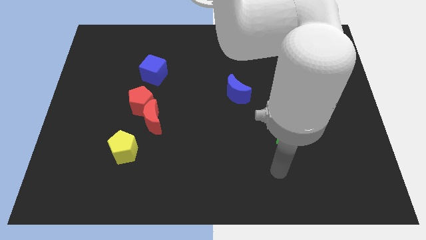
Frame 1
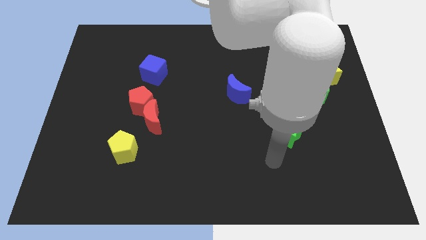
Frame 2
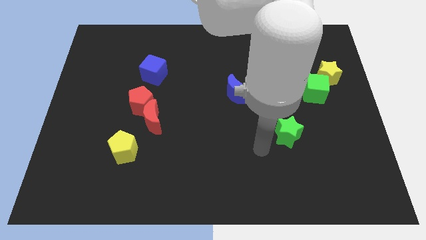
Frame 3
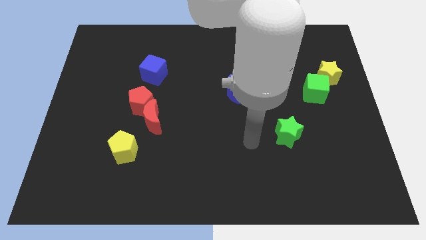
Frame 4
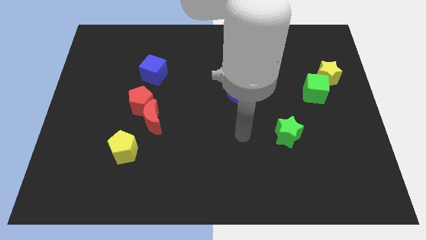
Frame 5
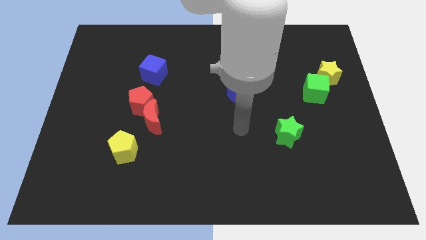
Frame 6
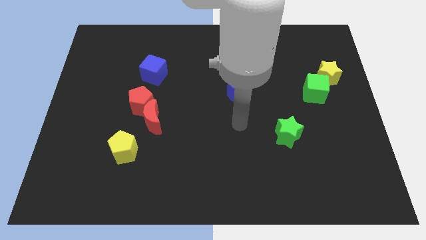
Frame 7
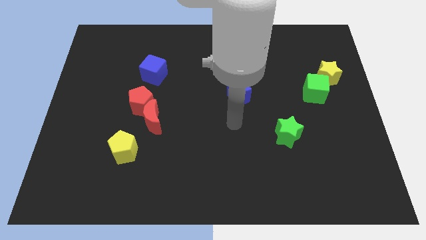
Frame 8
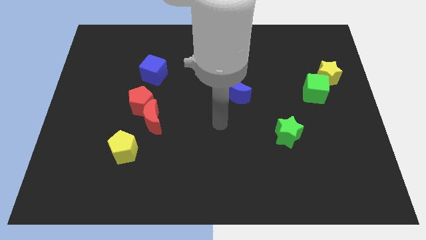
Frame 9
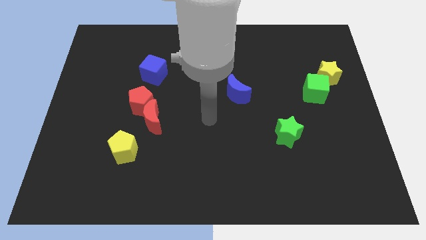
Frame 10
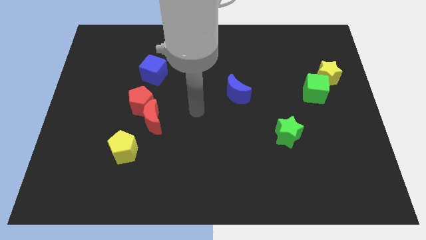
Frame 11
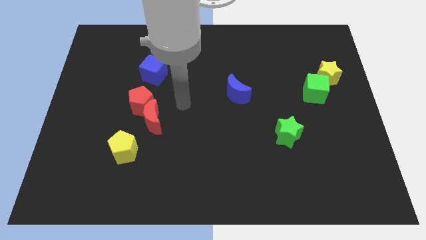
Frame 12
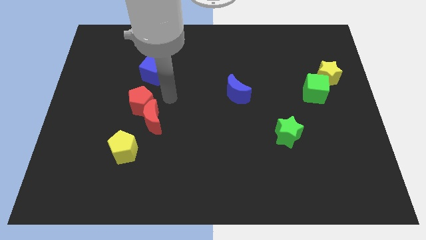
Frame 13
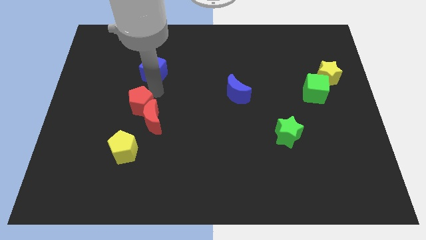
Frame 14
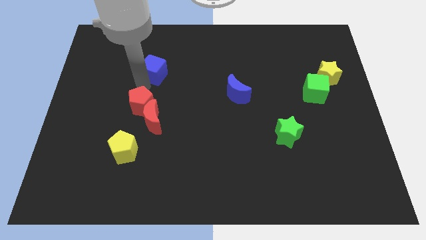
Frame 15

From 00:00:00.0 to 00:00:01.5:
move the arm to the top of red pentagon

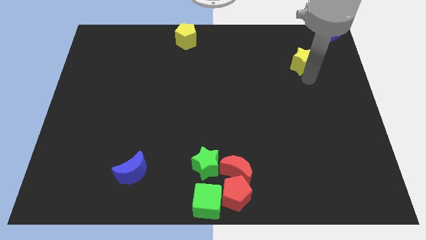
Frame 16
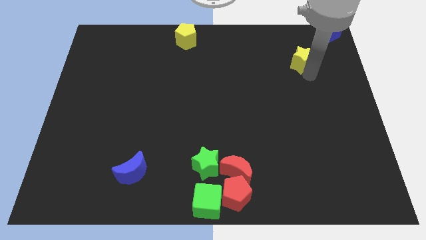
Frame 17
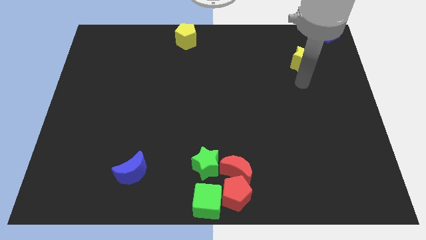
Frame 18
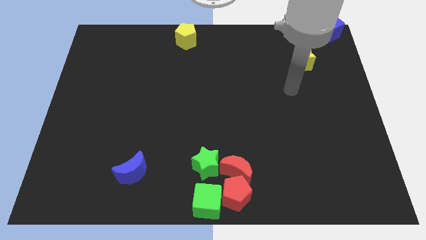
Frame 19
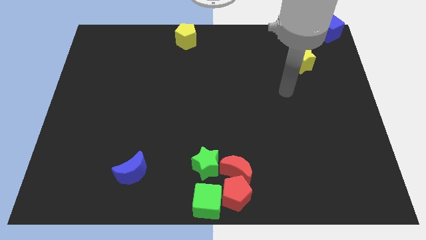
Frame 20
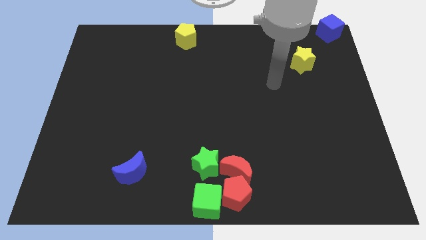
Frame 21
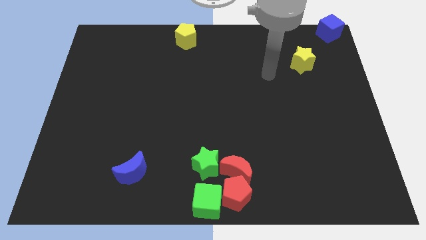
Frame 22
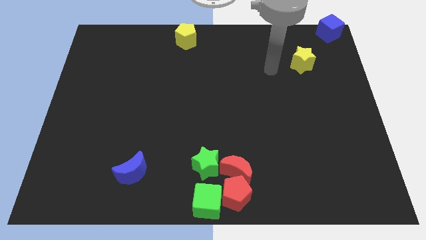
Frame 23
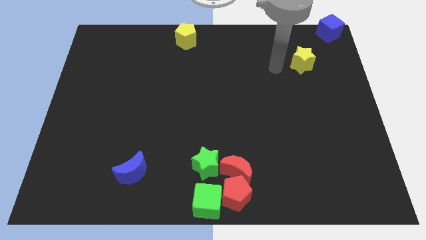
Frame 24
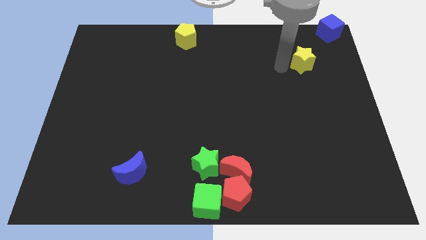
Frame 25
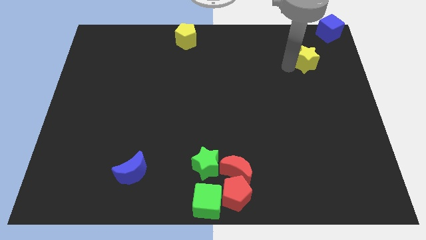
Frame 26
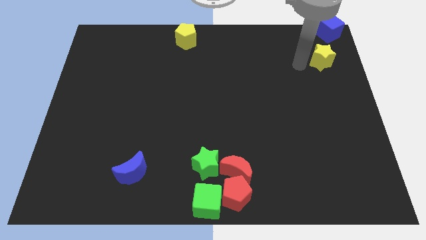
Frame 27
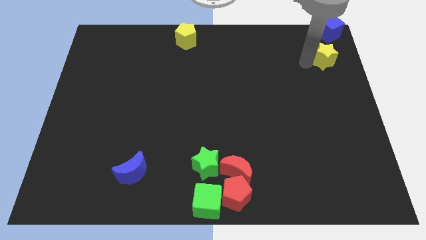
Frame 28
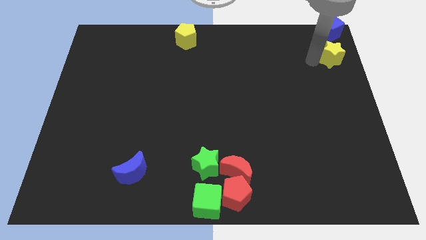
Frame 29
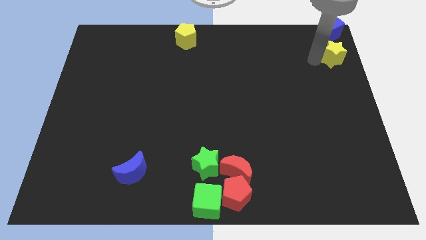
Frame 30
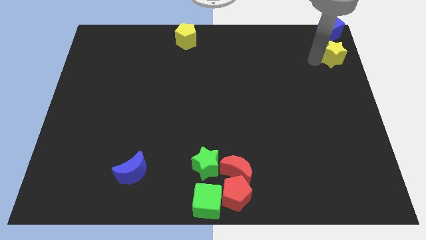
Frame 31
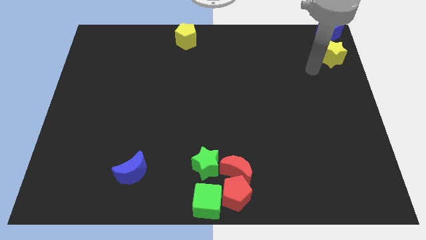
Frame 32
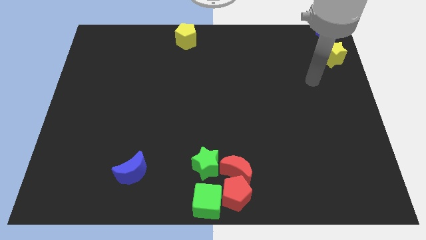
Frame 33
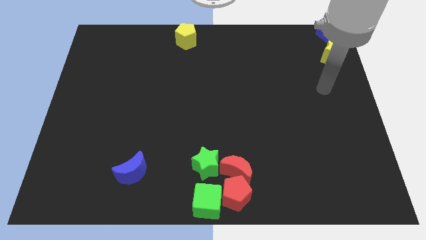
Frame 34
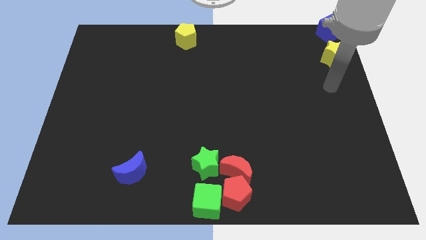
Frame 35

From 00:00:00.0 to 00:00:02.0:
push yellow star below blue cube

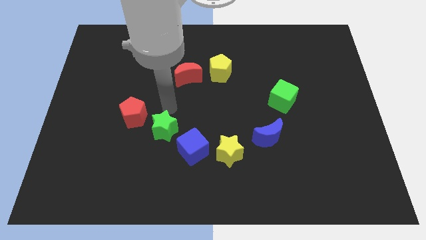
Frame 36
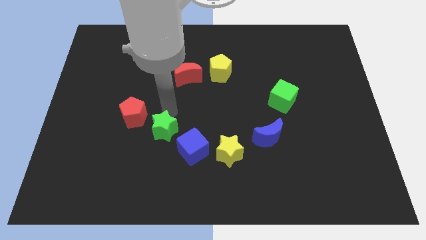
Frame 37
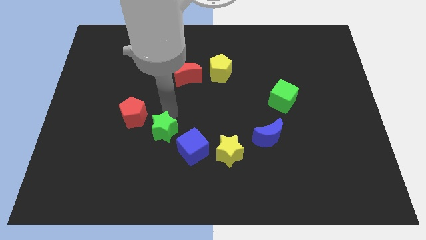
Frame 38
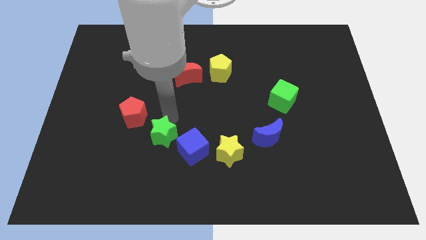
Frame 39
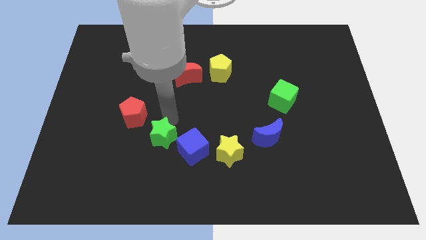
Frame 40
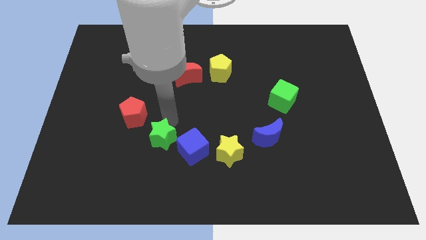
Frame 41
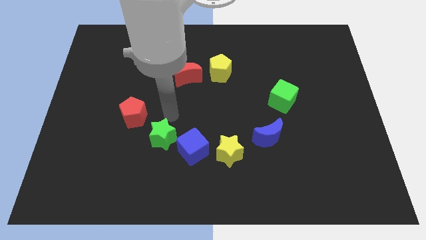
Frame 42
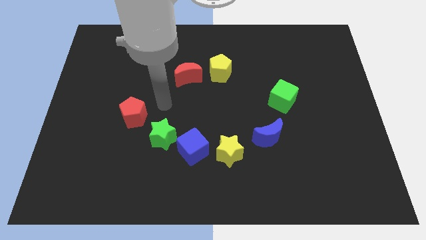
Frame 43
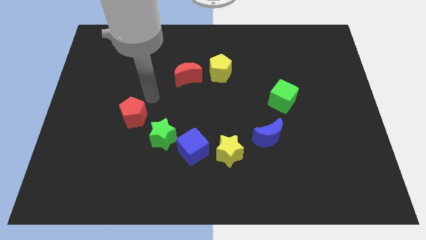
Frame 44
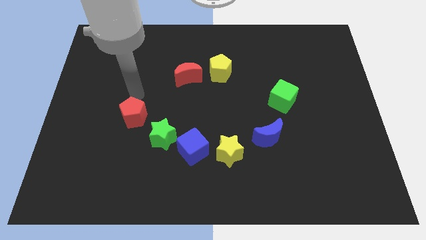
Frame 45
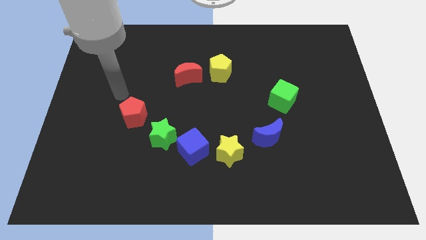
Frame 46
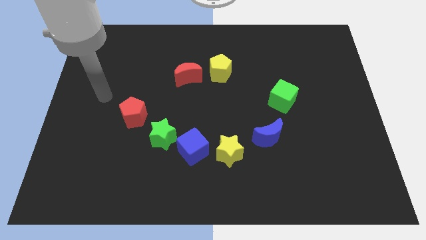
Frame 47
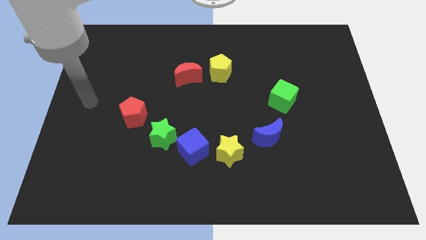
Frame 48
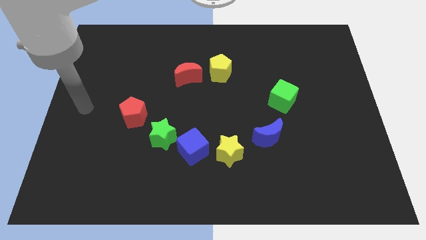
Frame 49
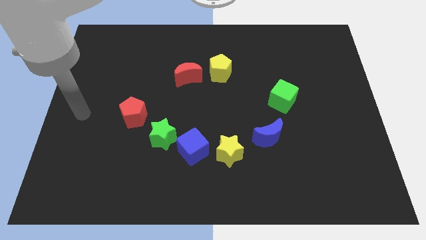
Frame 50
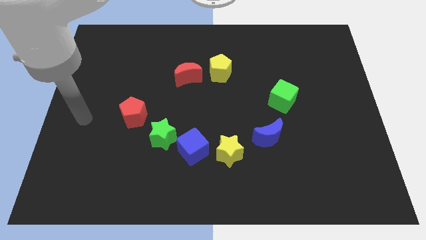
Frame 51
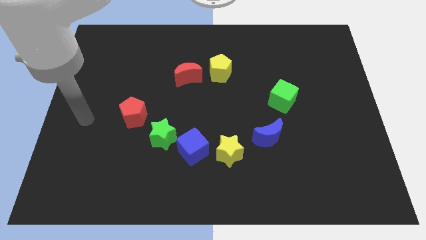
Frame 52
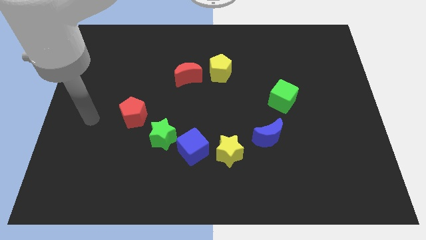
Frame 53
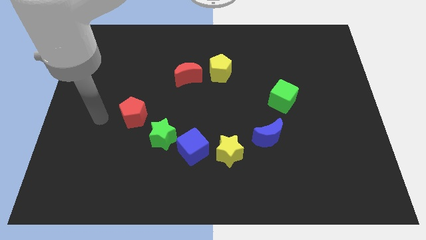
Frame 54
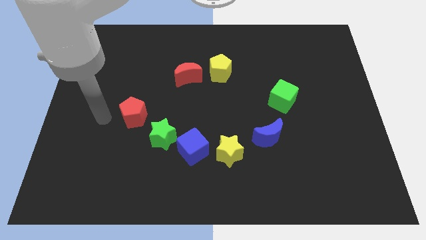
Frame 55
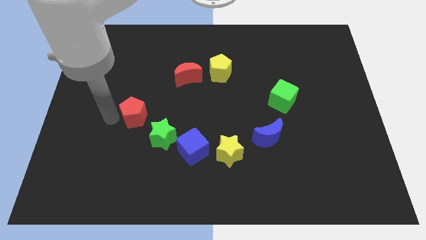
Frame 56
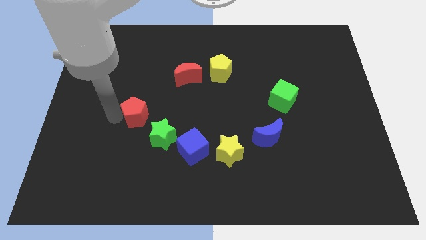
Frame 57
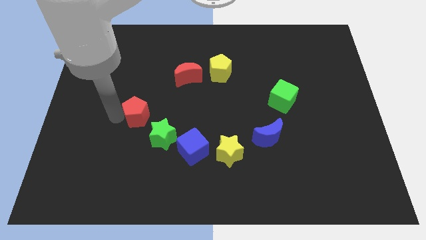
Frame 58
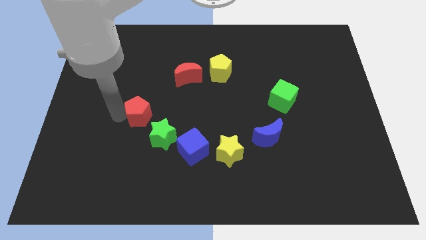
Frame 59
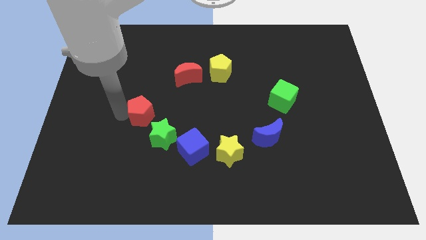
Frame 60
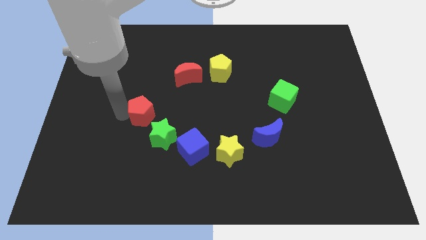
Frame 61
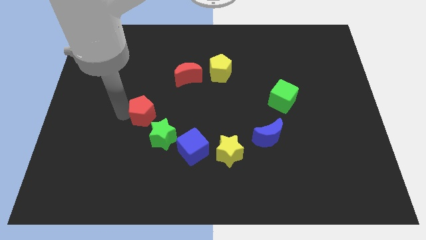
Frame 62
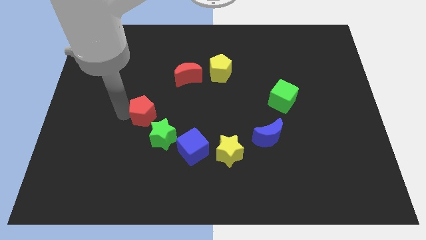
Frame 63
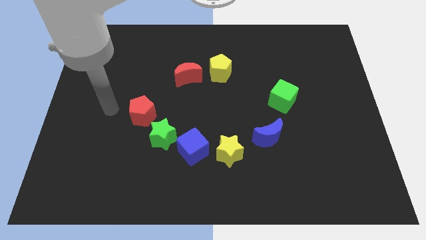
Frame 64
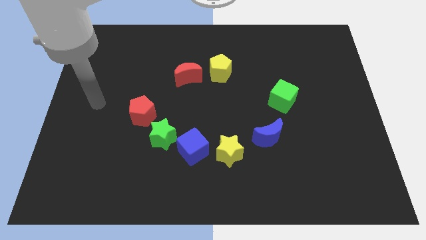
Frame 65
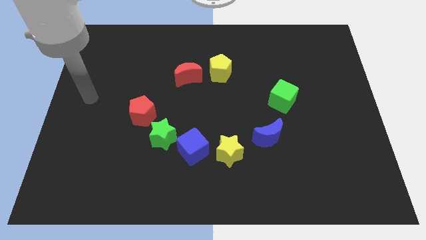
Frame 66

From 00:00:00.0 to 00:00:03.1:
push the green star and the red pentagon in different directions

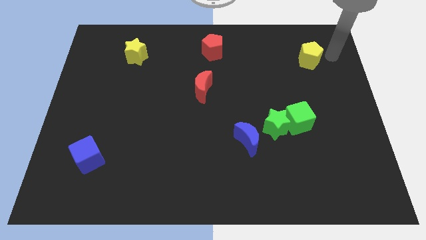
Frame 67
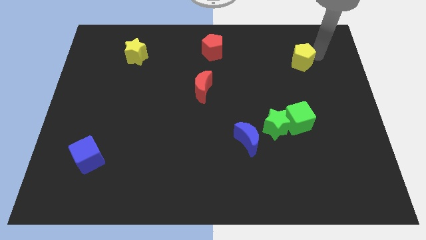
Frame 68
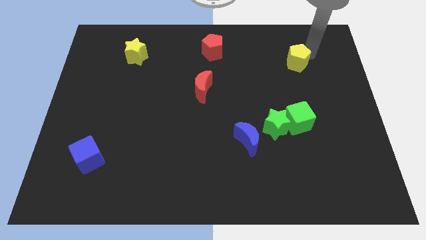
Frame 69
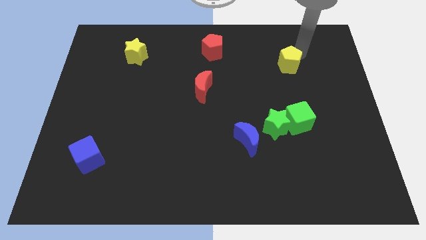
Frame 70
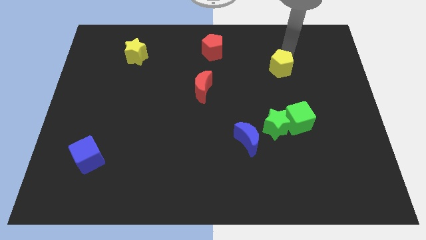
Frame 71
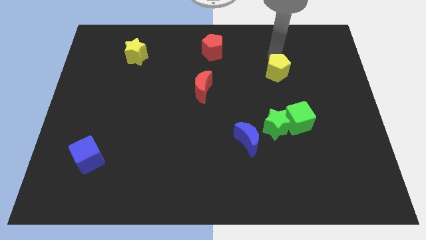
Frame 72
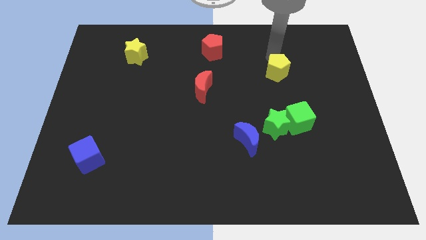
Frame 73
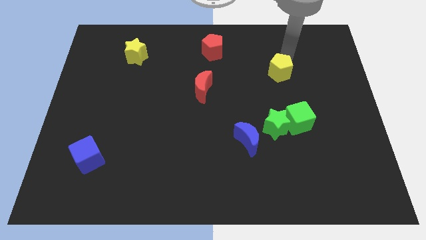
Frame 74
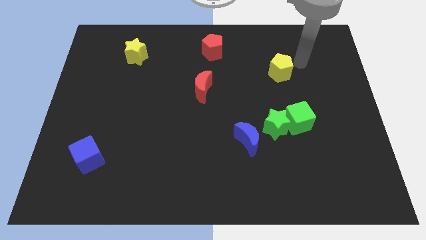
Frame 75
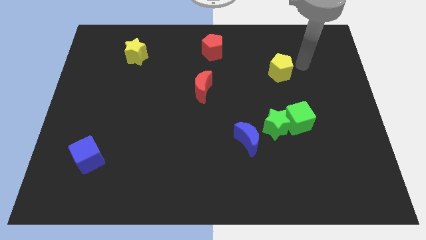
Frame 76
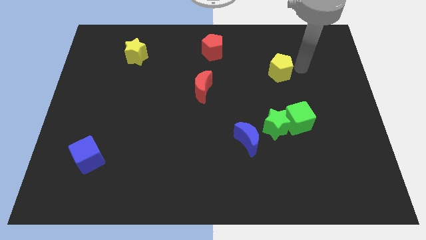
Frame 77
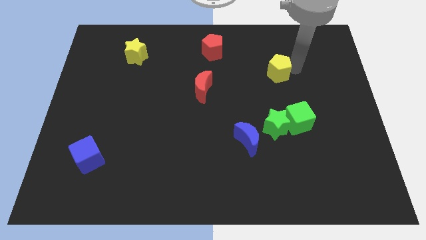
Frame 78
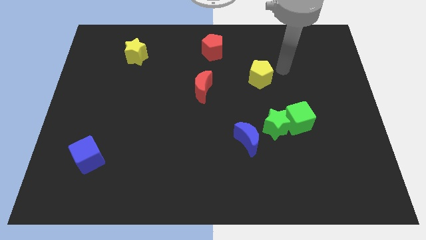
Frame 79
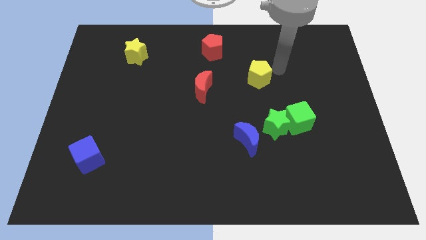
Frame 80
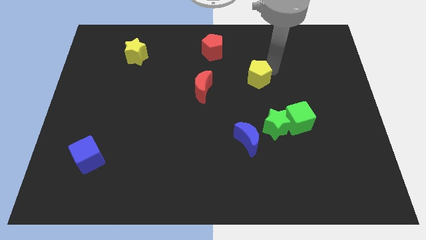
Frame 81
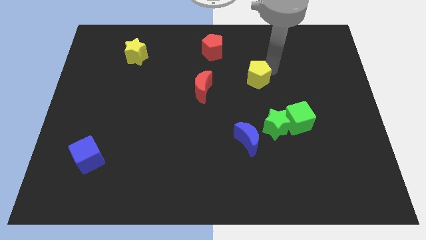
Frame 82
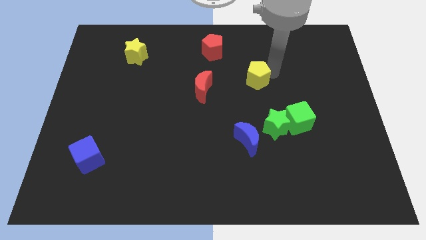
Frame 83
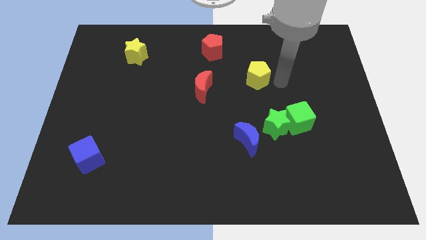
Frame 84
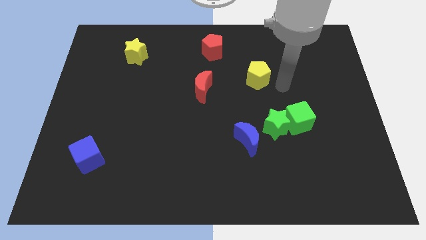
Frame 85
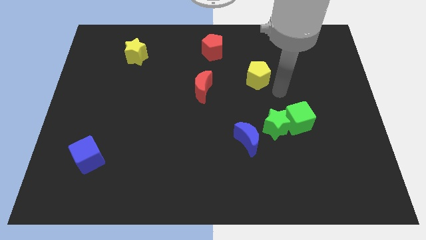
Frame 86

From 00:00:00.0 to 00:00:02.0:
move yellow pentagon towards red blocks

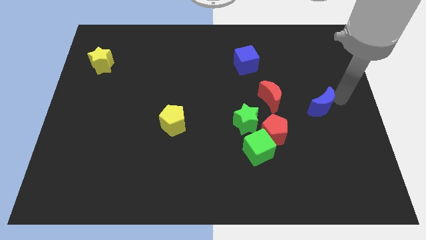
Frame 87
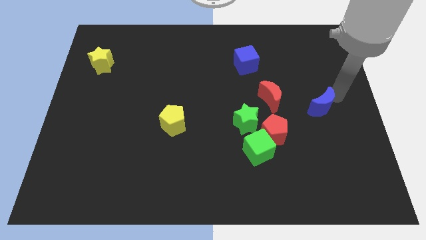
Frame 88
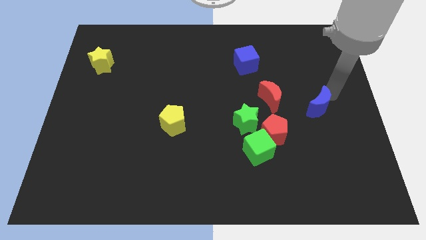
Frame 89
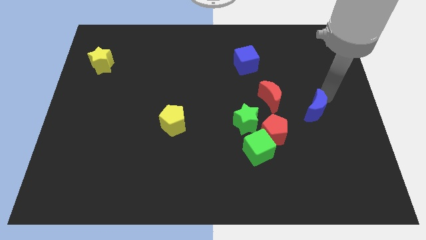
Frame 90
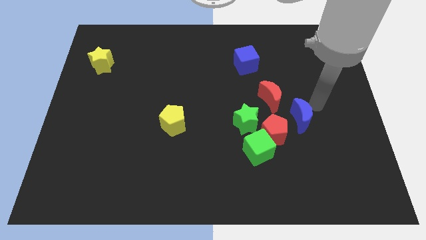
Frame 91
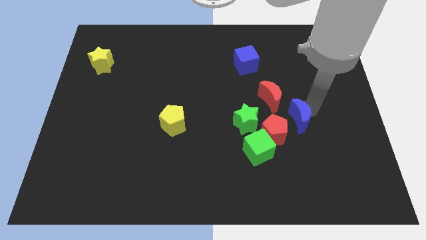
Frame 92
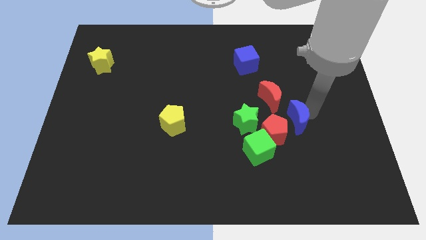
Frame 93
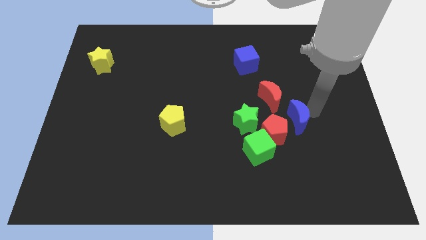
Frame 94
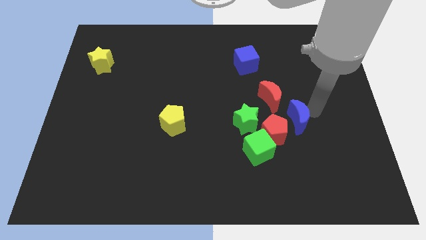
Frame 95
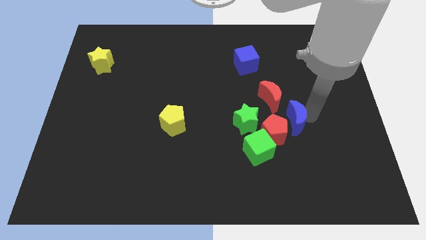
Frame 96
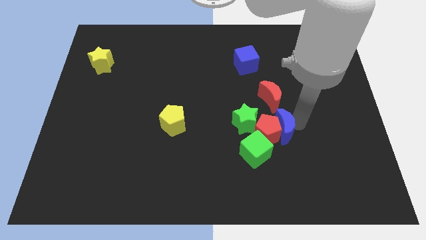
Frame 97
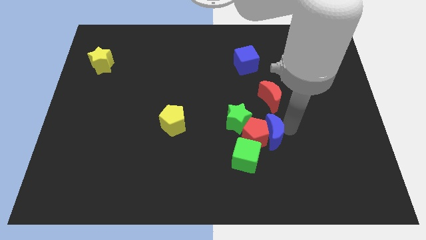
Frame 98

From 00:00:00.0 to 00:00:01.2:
push blue crescent below red crescent
